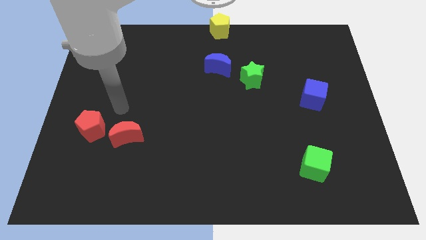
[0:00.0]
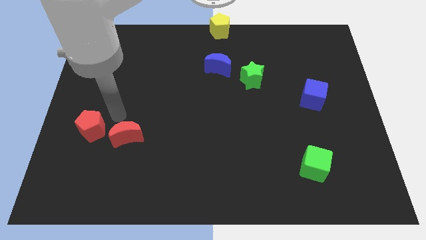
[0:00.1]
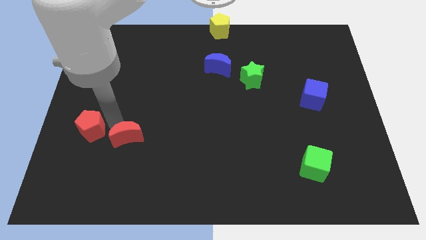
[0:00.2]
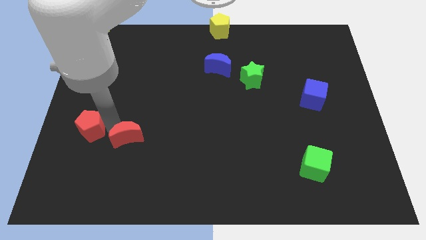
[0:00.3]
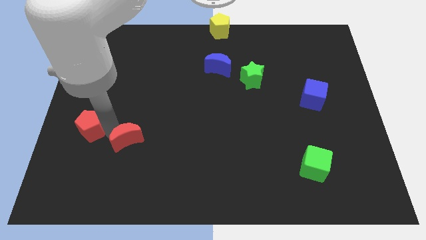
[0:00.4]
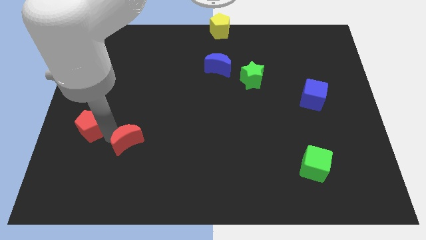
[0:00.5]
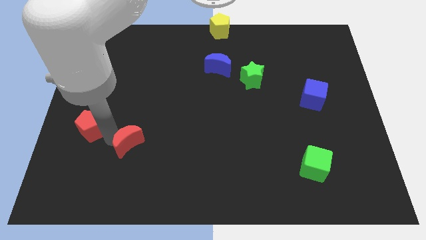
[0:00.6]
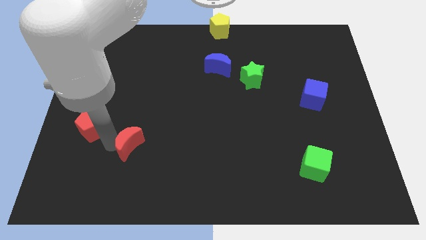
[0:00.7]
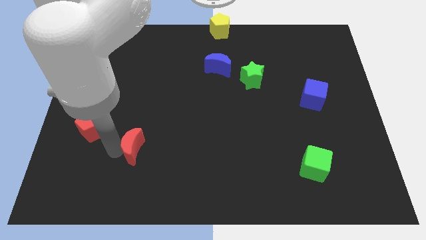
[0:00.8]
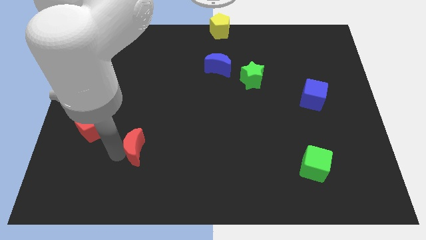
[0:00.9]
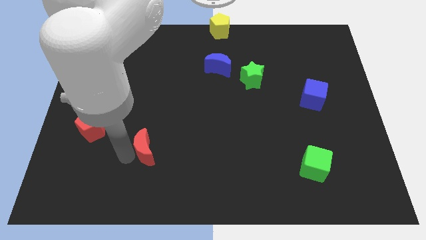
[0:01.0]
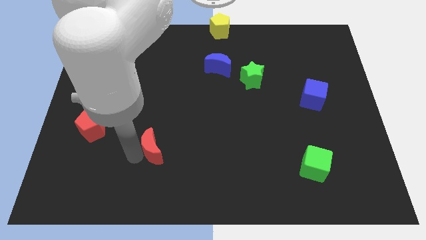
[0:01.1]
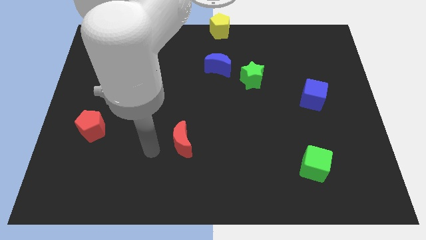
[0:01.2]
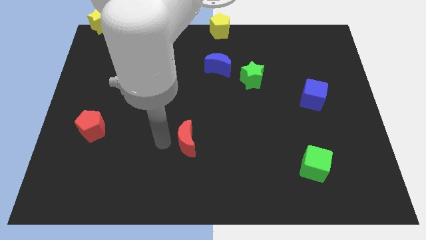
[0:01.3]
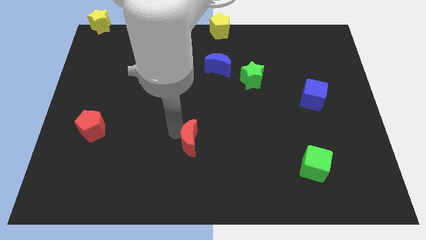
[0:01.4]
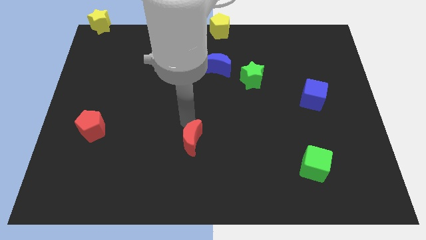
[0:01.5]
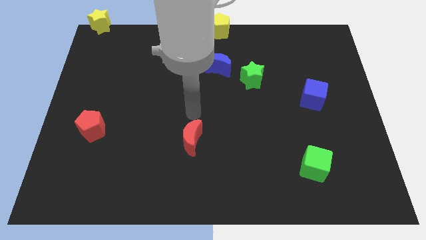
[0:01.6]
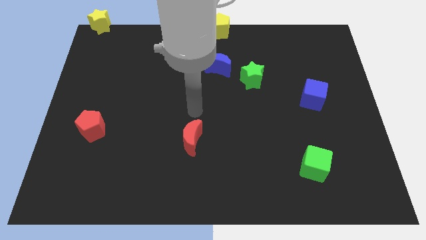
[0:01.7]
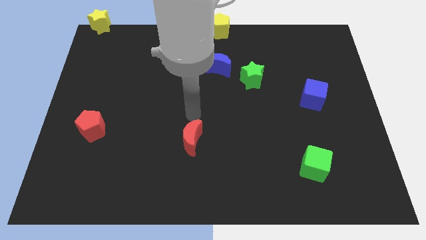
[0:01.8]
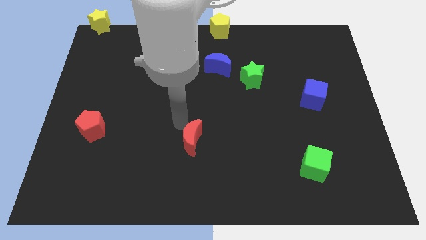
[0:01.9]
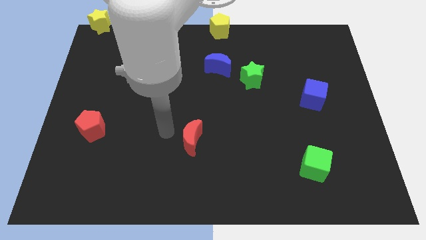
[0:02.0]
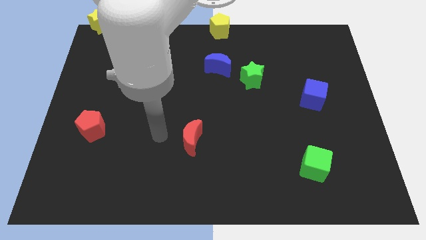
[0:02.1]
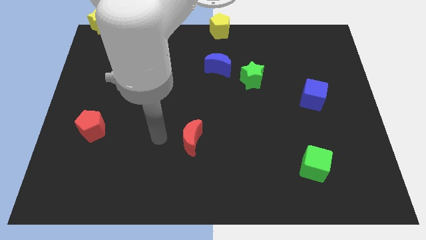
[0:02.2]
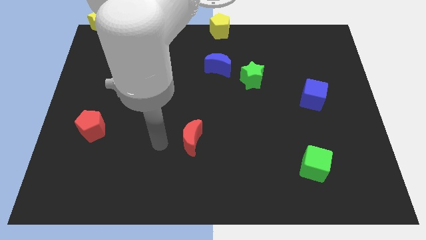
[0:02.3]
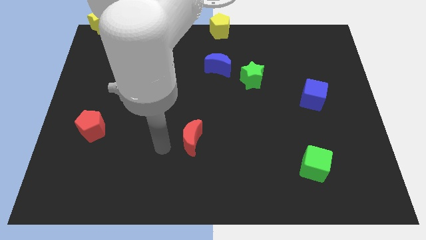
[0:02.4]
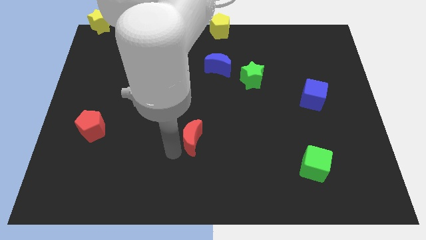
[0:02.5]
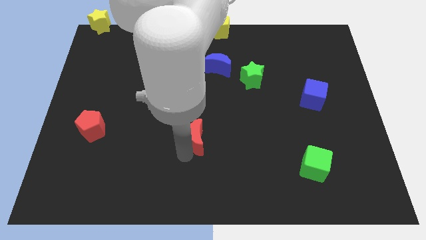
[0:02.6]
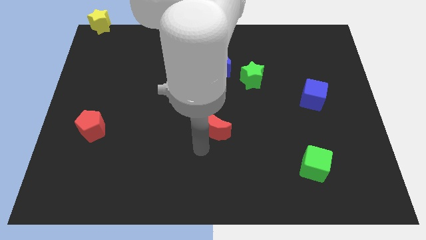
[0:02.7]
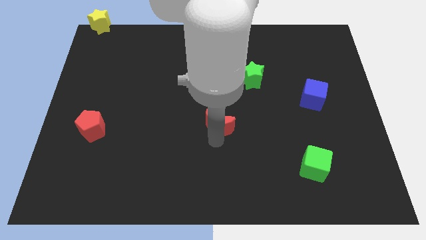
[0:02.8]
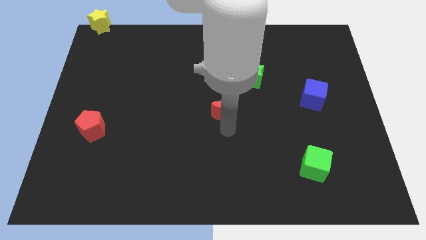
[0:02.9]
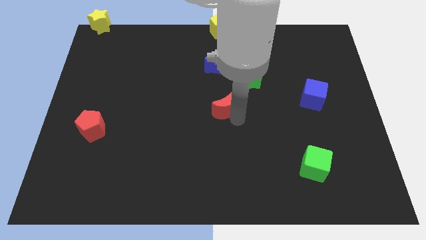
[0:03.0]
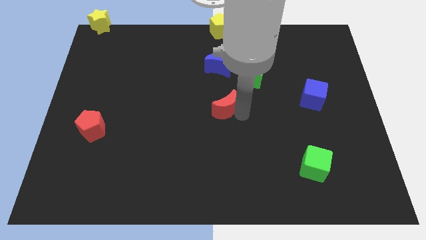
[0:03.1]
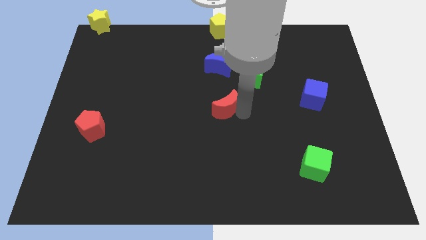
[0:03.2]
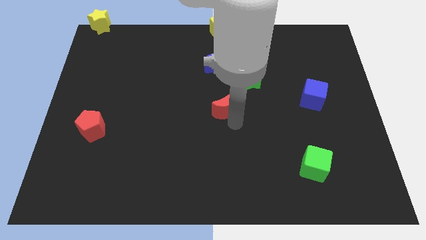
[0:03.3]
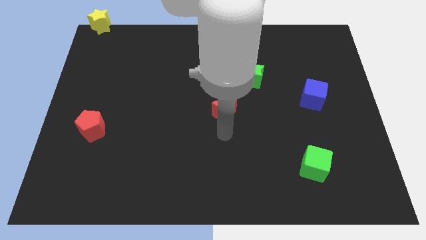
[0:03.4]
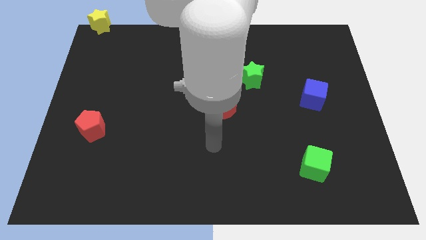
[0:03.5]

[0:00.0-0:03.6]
slide red moon diagonal to the green star

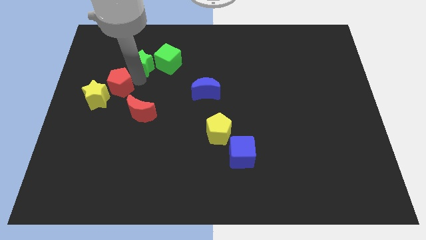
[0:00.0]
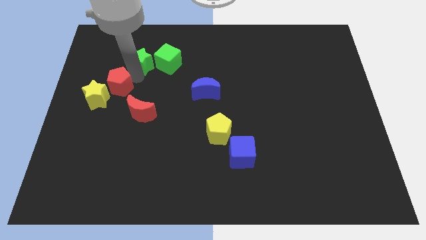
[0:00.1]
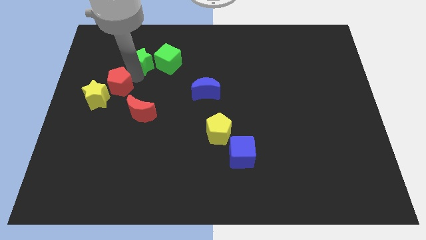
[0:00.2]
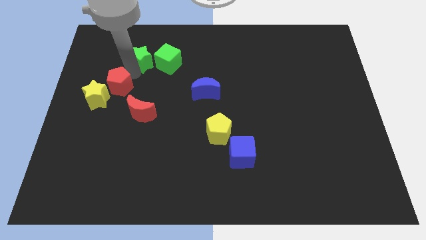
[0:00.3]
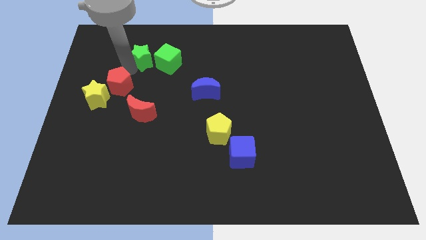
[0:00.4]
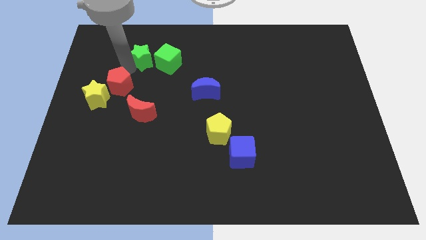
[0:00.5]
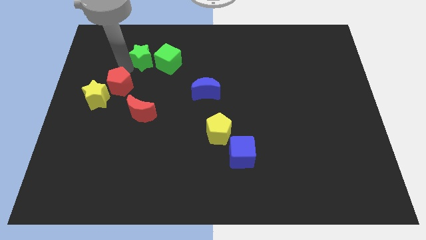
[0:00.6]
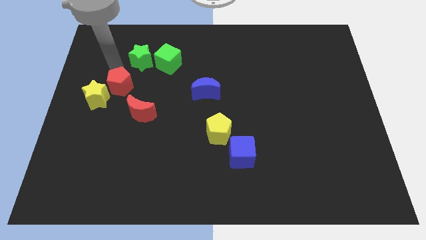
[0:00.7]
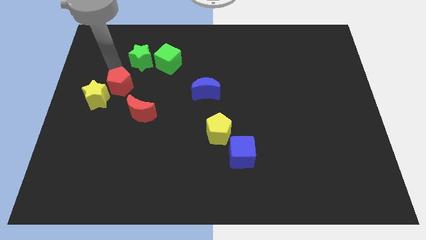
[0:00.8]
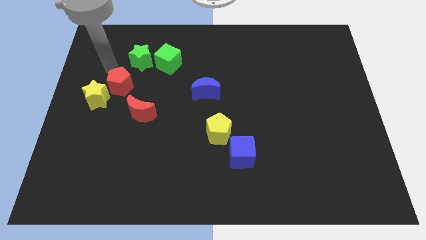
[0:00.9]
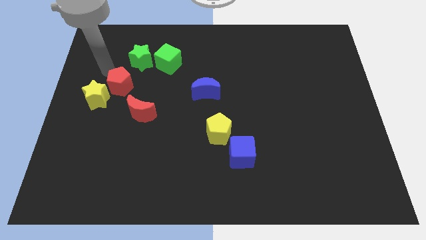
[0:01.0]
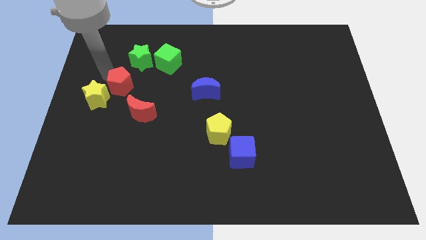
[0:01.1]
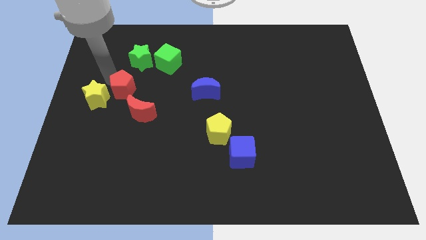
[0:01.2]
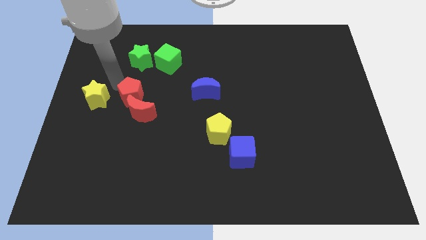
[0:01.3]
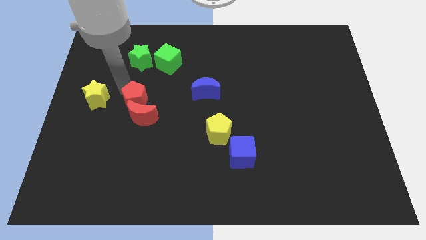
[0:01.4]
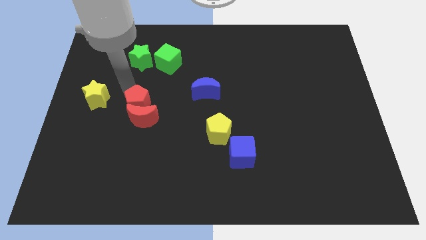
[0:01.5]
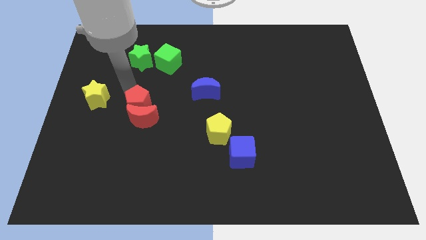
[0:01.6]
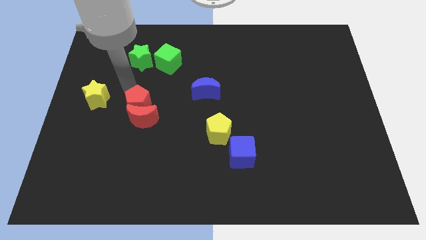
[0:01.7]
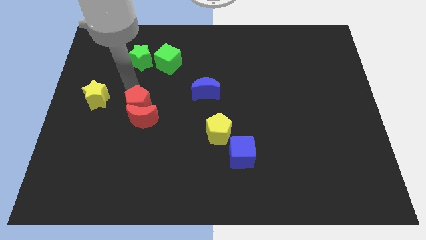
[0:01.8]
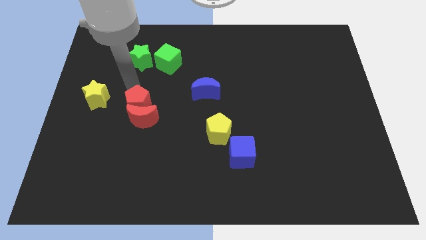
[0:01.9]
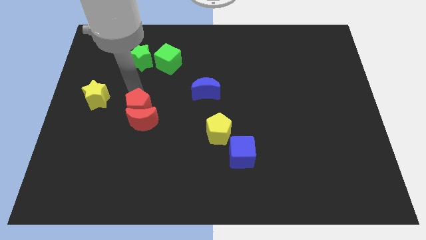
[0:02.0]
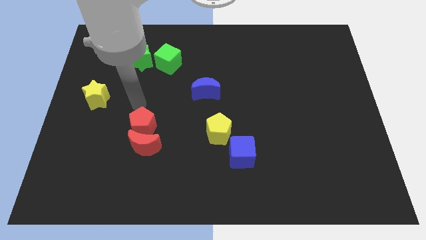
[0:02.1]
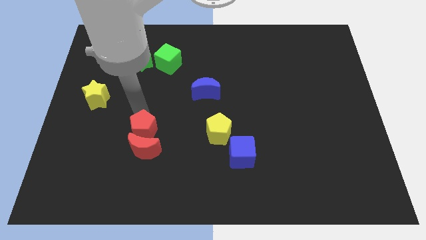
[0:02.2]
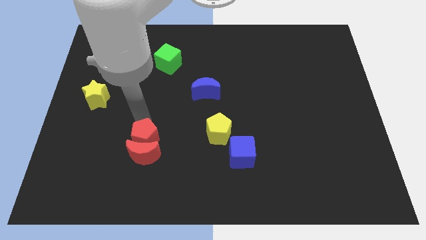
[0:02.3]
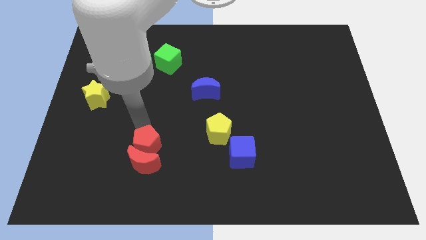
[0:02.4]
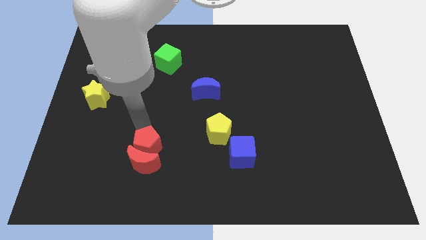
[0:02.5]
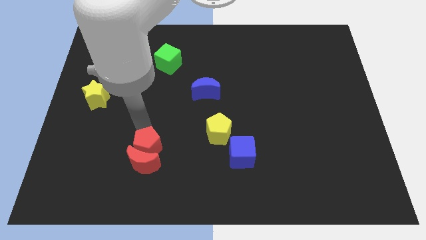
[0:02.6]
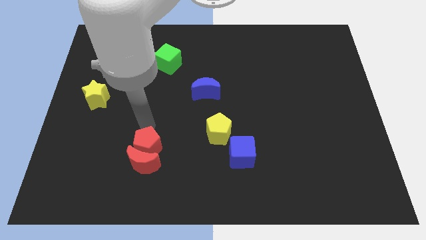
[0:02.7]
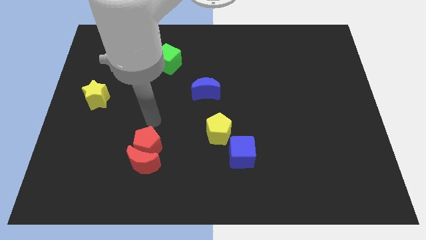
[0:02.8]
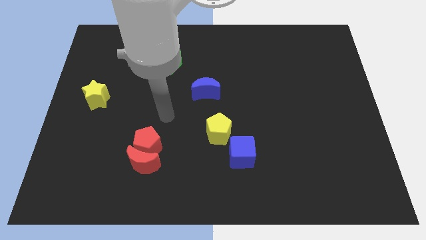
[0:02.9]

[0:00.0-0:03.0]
push red pentagon with red crescent to the bottom left

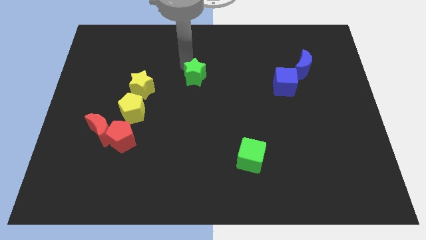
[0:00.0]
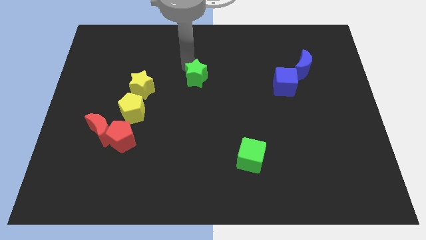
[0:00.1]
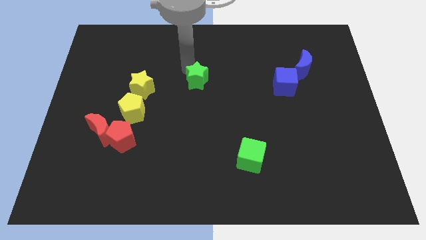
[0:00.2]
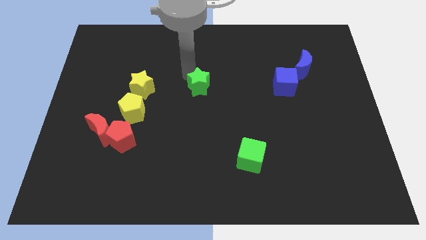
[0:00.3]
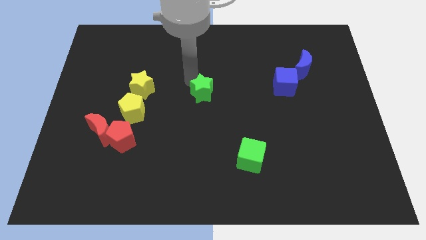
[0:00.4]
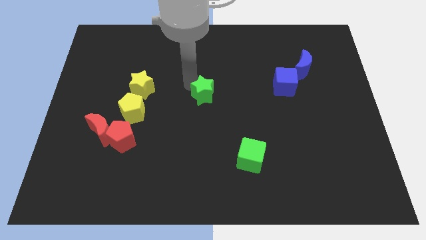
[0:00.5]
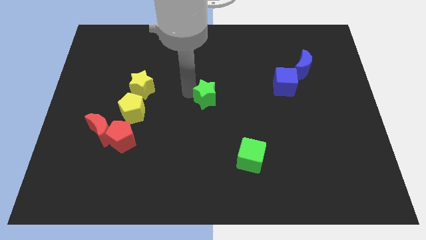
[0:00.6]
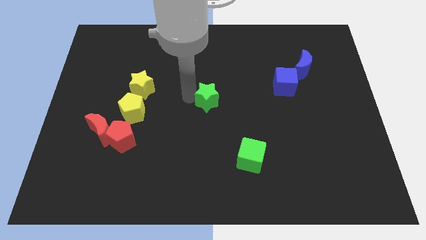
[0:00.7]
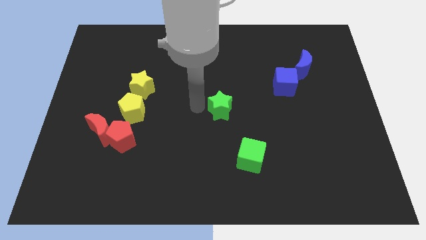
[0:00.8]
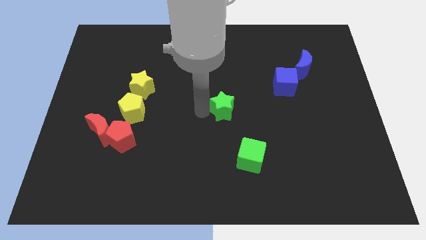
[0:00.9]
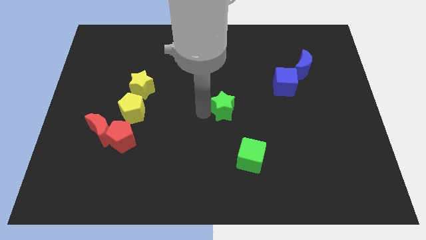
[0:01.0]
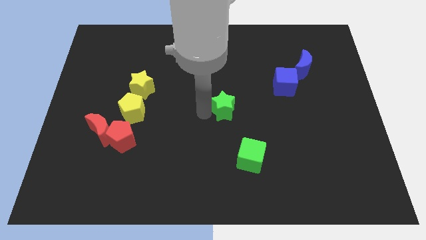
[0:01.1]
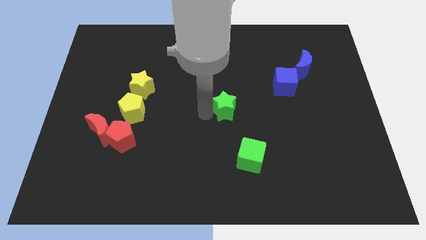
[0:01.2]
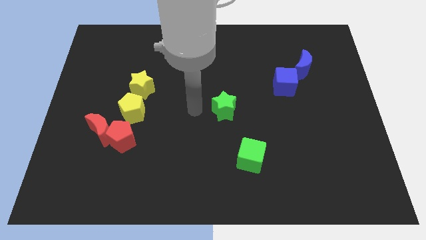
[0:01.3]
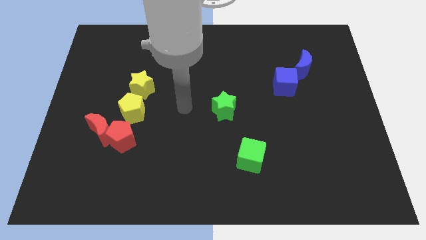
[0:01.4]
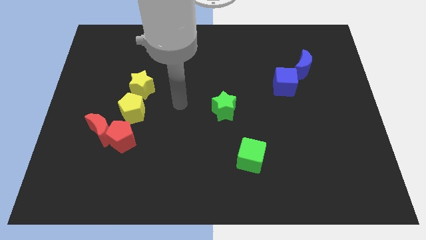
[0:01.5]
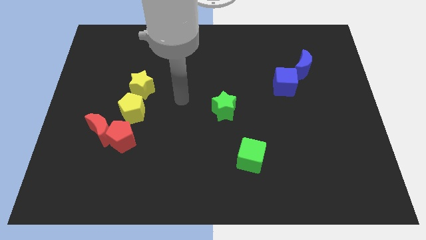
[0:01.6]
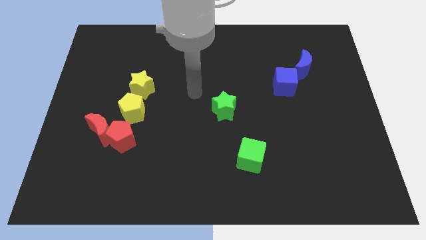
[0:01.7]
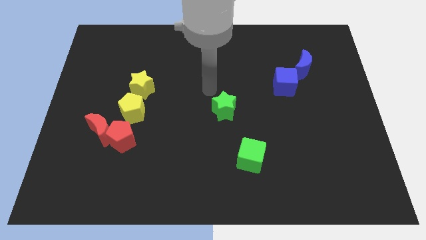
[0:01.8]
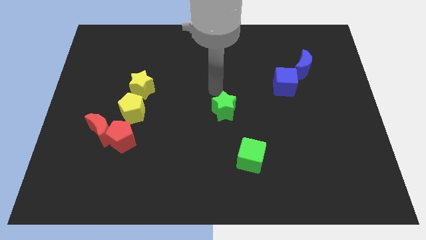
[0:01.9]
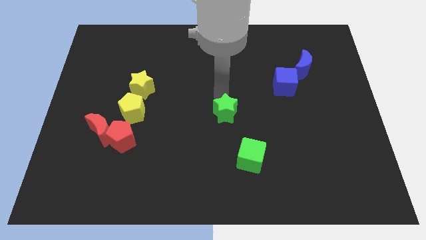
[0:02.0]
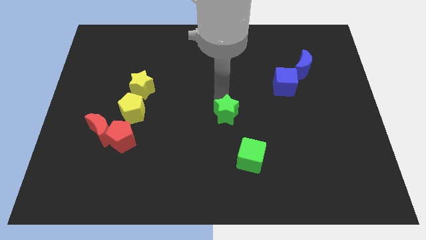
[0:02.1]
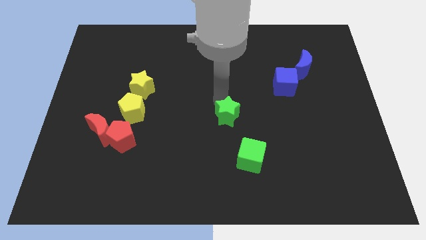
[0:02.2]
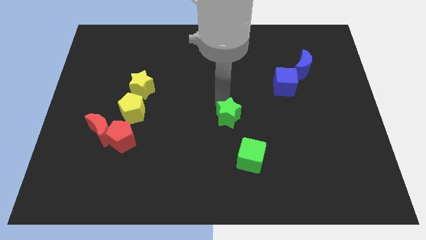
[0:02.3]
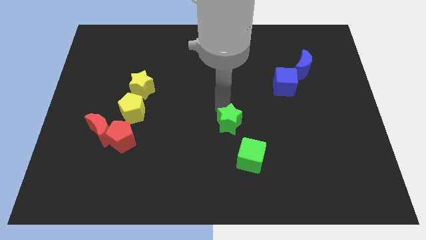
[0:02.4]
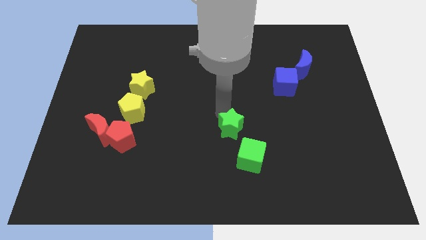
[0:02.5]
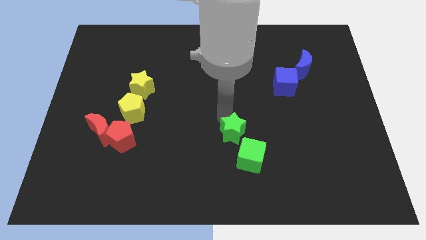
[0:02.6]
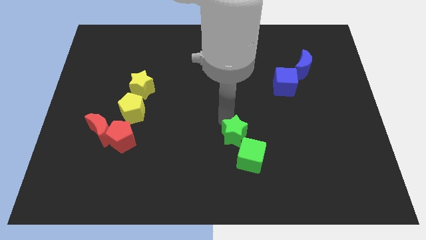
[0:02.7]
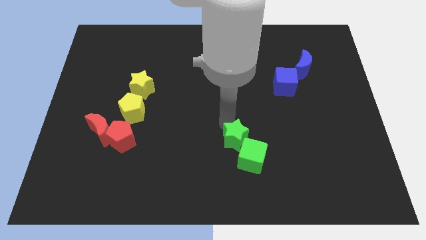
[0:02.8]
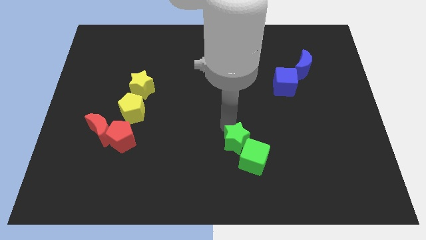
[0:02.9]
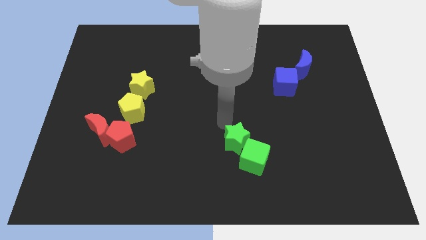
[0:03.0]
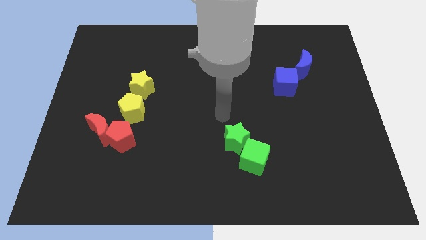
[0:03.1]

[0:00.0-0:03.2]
place the green star into the green cube
